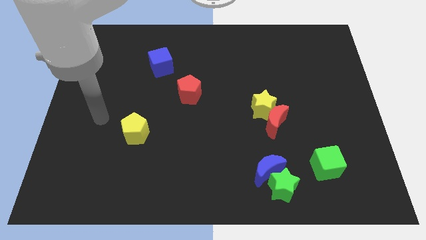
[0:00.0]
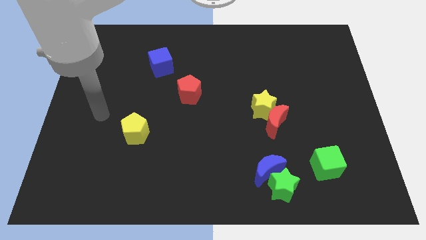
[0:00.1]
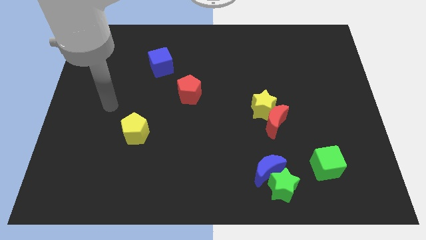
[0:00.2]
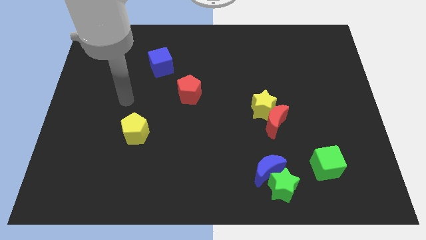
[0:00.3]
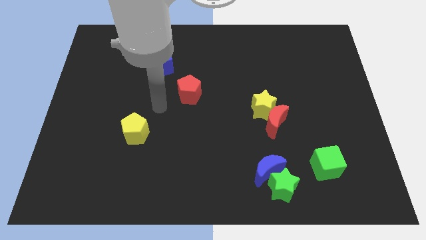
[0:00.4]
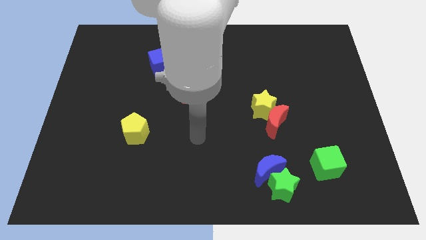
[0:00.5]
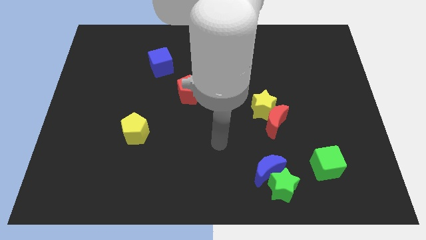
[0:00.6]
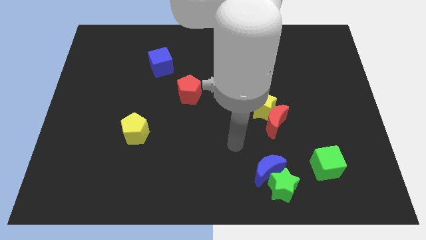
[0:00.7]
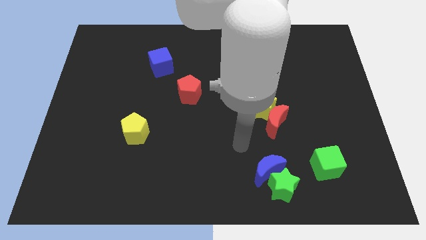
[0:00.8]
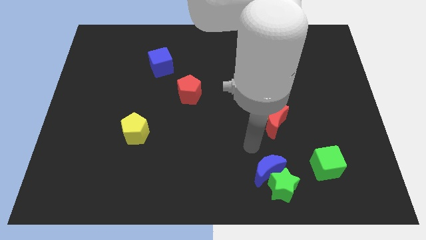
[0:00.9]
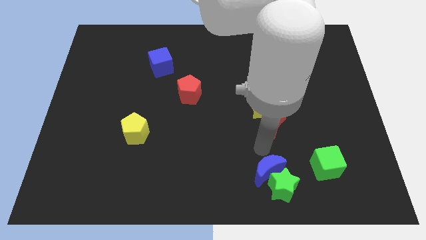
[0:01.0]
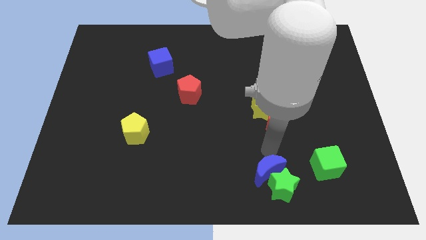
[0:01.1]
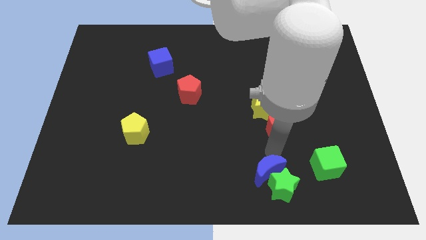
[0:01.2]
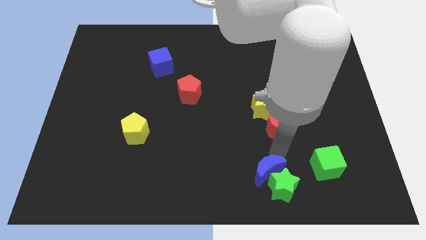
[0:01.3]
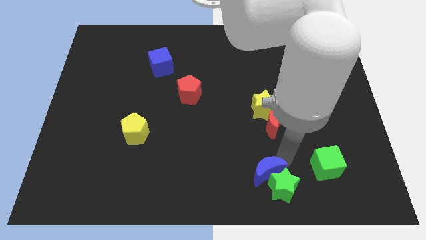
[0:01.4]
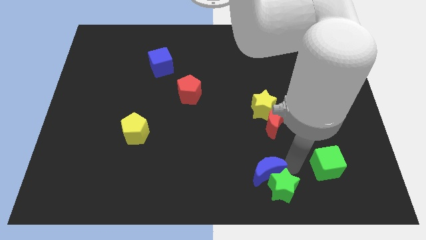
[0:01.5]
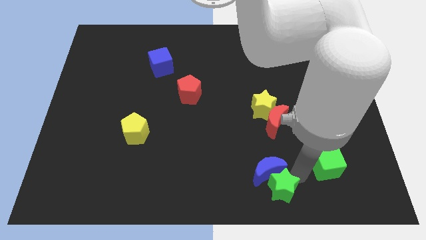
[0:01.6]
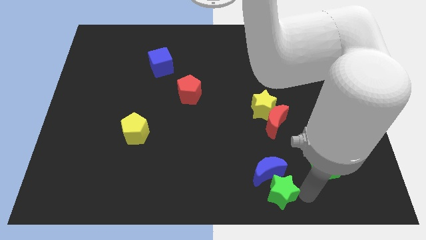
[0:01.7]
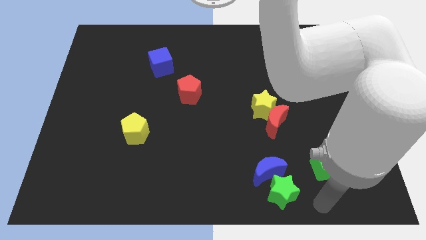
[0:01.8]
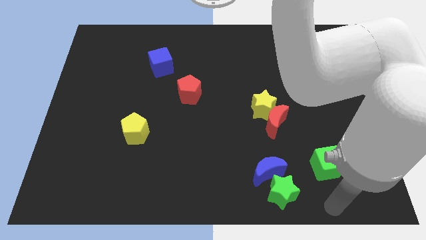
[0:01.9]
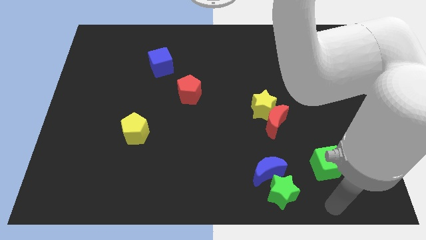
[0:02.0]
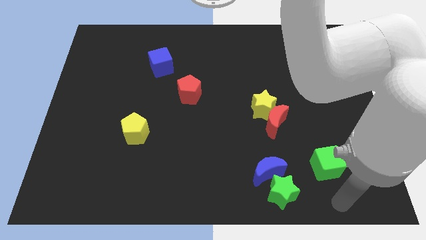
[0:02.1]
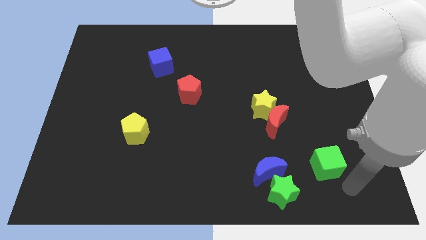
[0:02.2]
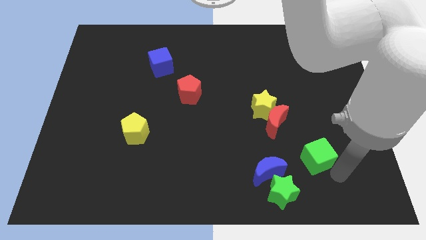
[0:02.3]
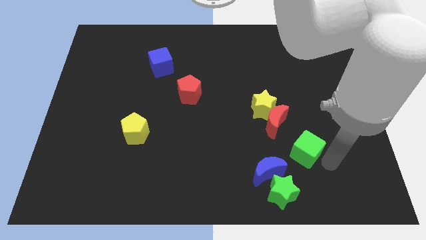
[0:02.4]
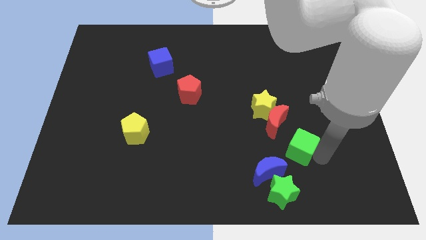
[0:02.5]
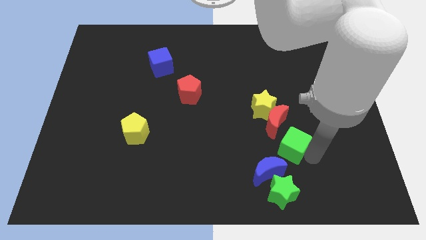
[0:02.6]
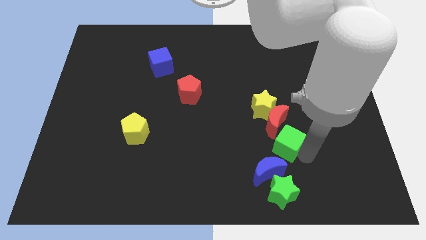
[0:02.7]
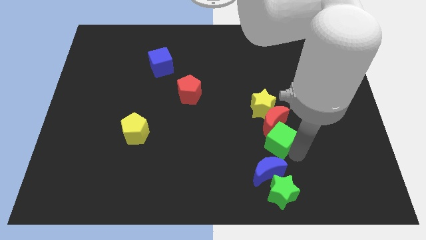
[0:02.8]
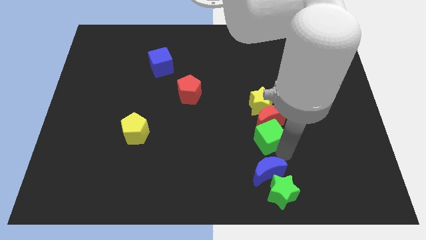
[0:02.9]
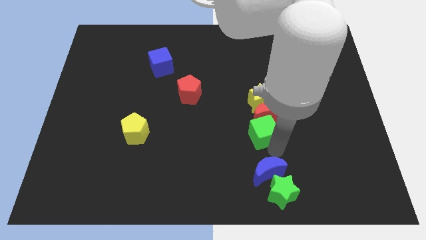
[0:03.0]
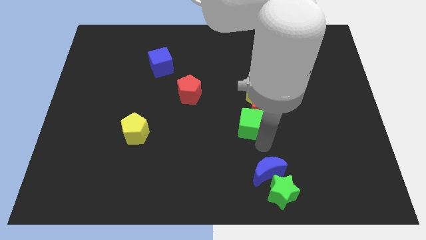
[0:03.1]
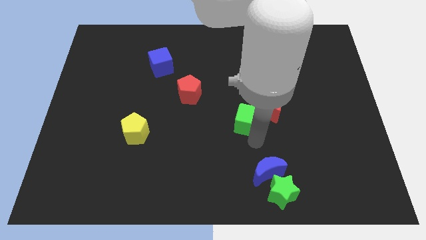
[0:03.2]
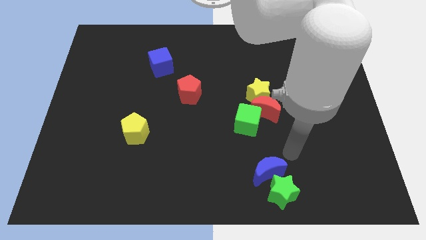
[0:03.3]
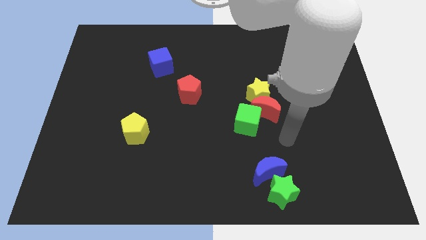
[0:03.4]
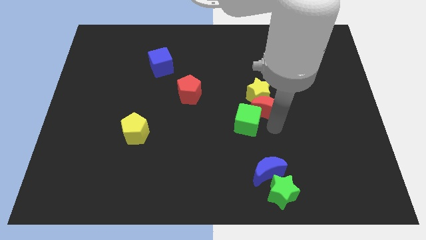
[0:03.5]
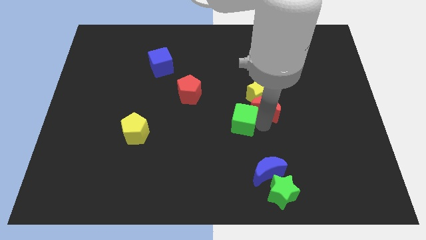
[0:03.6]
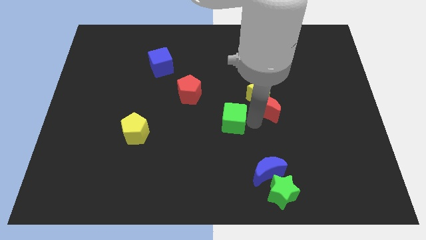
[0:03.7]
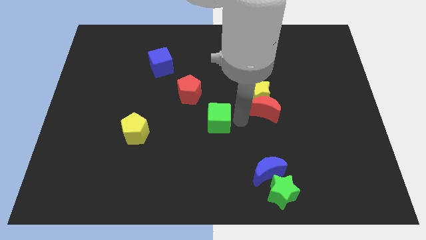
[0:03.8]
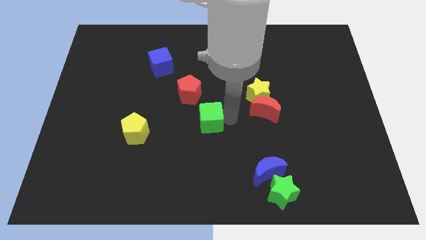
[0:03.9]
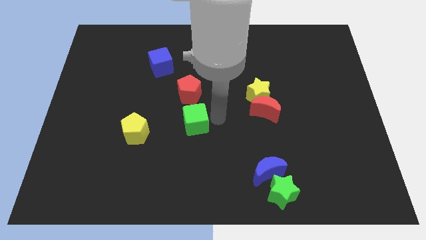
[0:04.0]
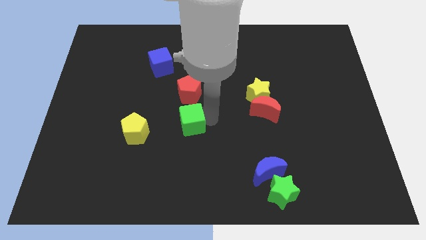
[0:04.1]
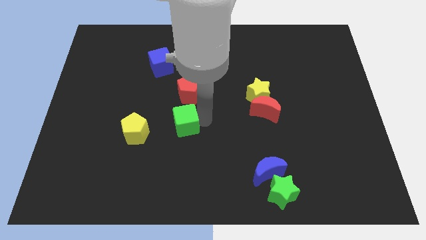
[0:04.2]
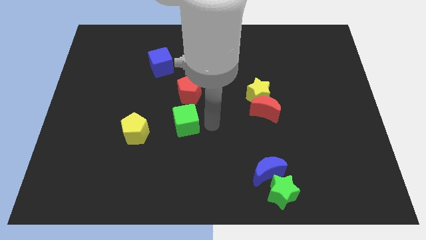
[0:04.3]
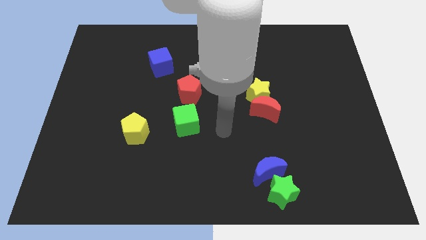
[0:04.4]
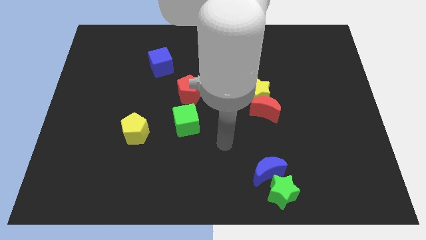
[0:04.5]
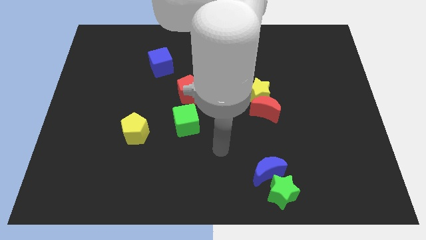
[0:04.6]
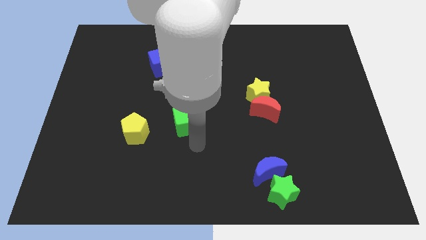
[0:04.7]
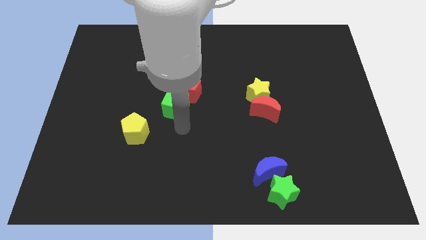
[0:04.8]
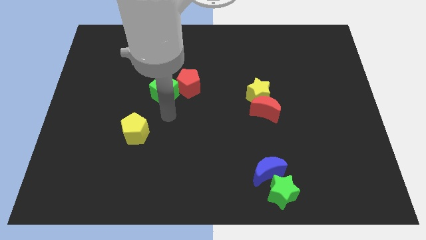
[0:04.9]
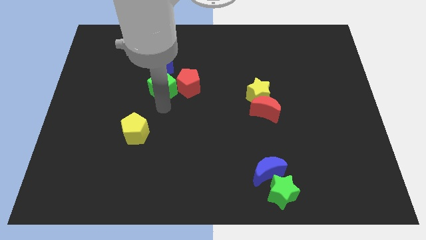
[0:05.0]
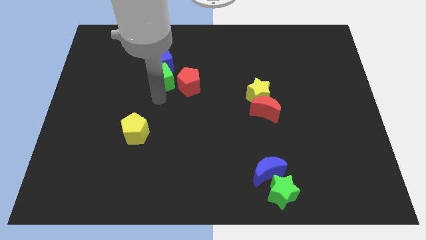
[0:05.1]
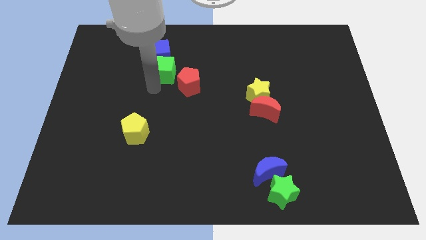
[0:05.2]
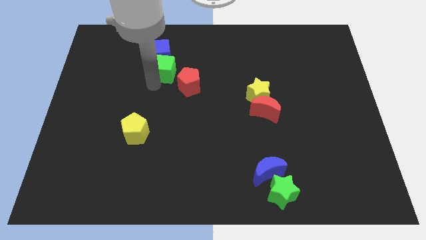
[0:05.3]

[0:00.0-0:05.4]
move the green cube next to the blue cube

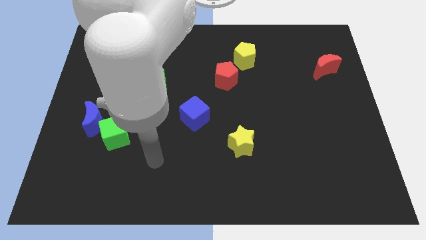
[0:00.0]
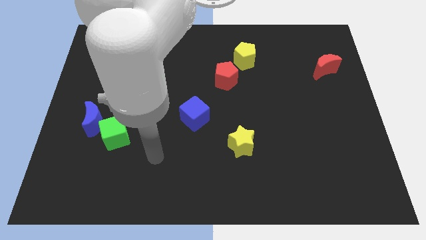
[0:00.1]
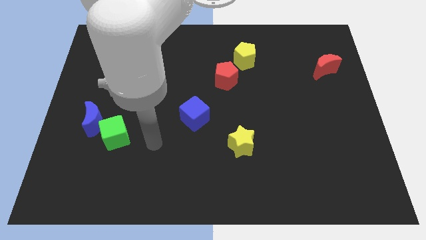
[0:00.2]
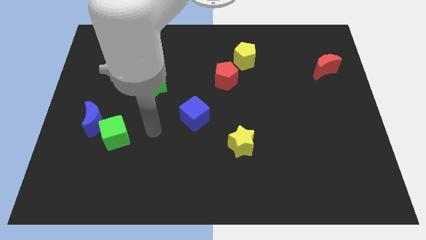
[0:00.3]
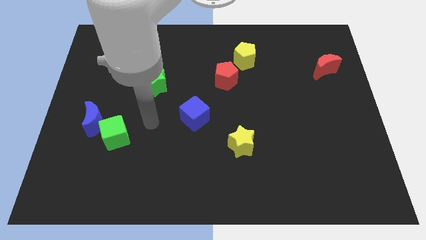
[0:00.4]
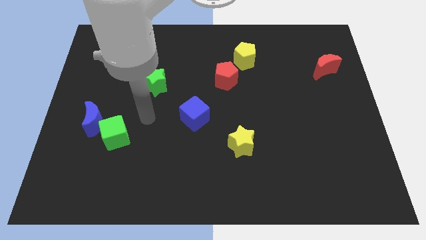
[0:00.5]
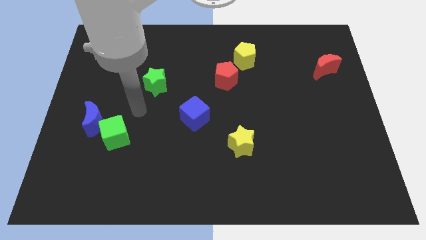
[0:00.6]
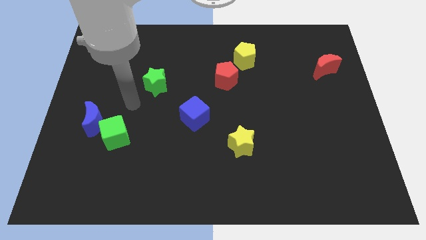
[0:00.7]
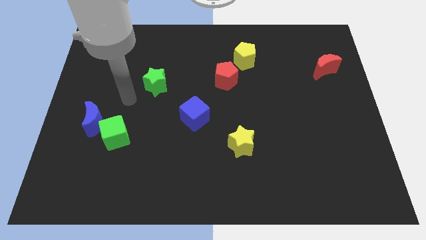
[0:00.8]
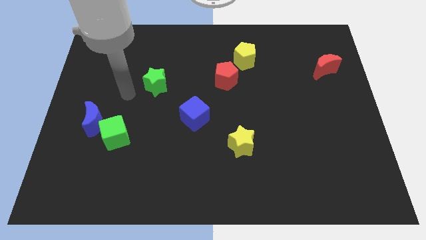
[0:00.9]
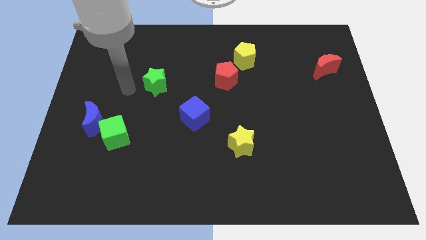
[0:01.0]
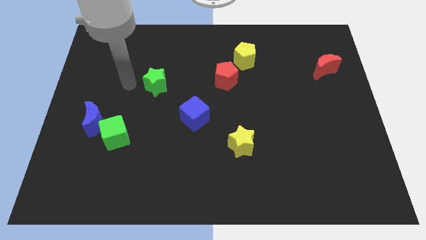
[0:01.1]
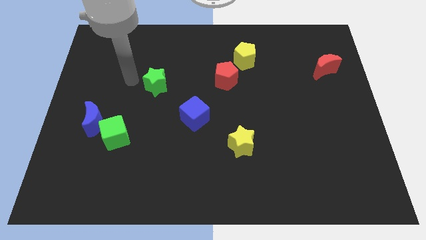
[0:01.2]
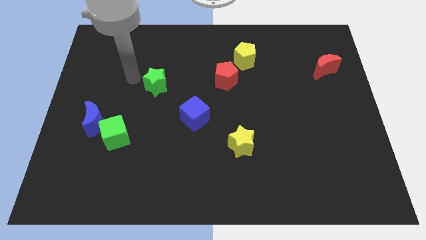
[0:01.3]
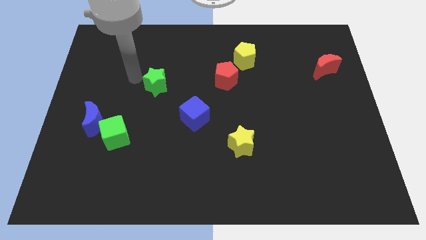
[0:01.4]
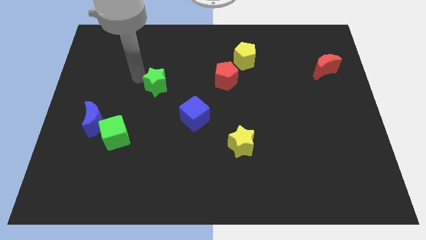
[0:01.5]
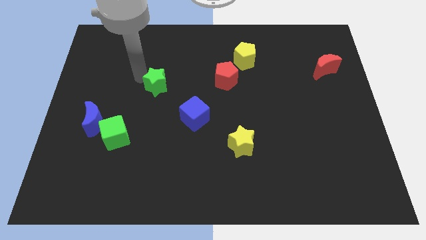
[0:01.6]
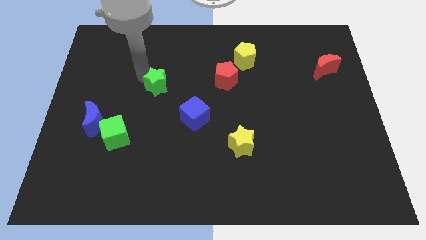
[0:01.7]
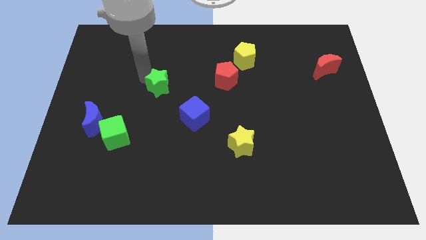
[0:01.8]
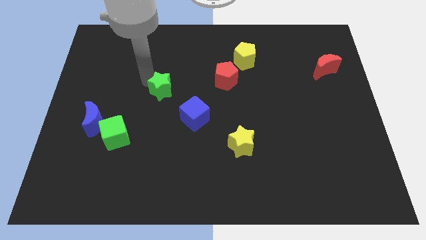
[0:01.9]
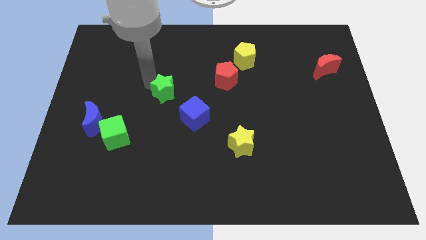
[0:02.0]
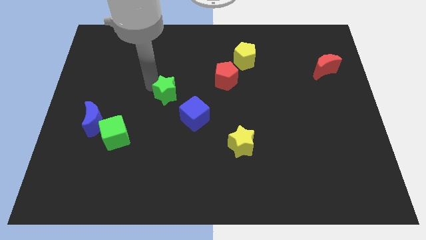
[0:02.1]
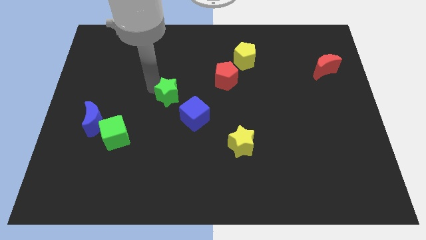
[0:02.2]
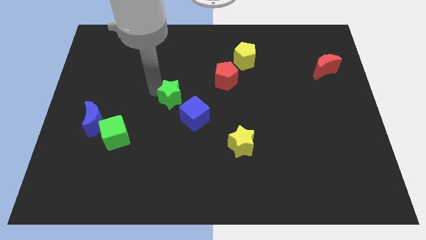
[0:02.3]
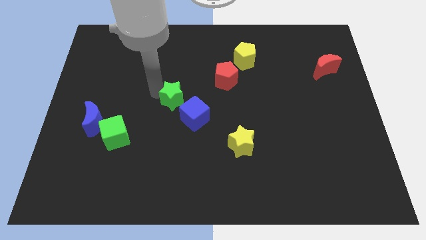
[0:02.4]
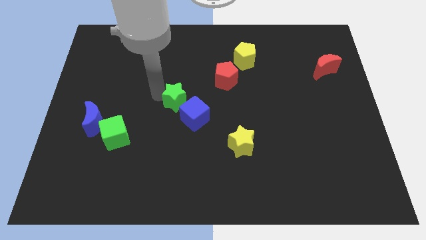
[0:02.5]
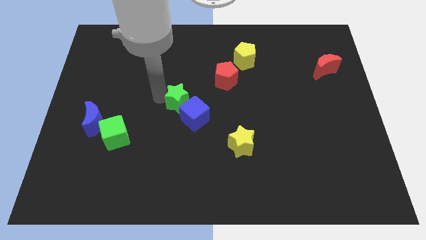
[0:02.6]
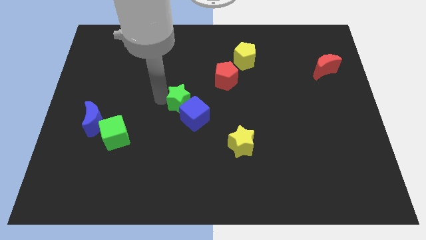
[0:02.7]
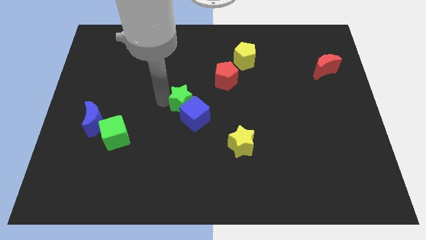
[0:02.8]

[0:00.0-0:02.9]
put the green star next to the blue cube
